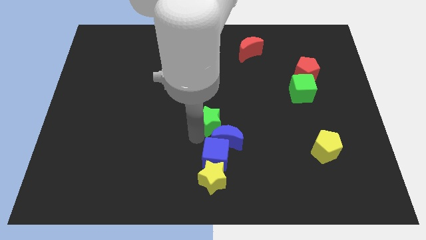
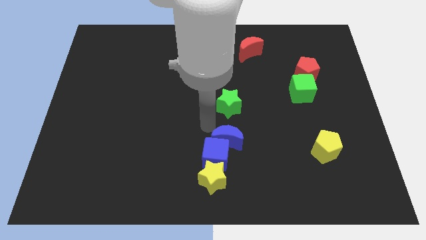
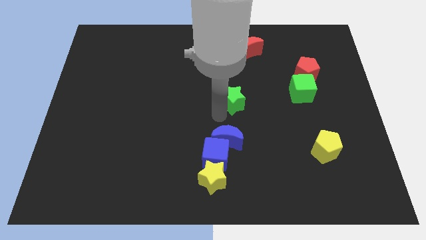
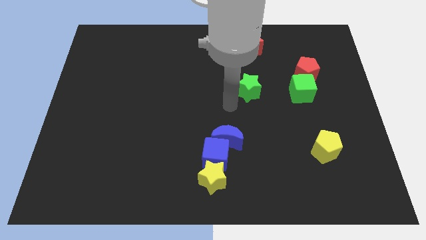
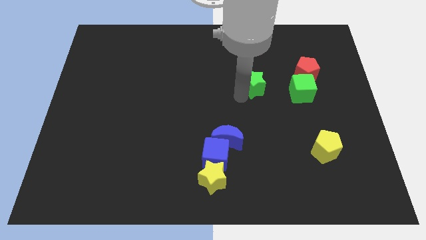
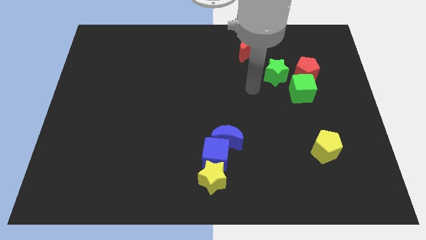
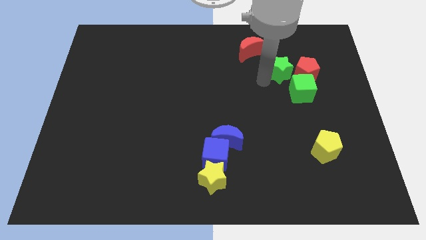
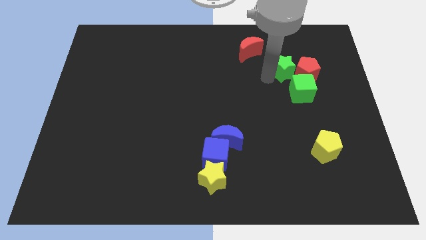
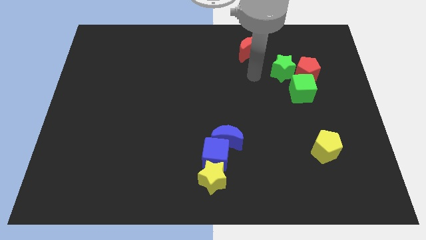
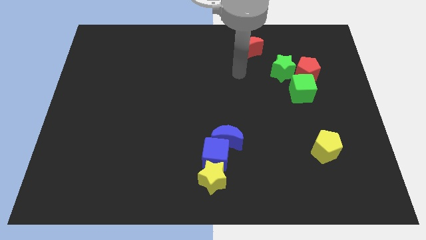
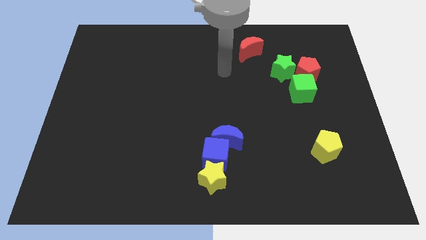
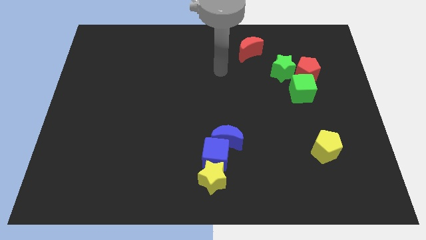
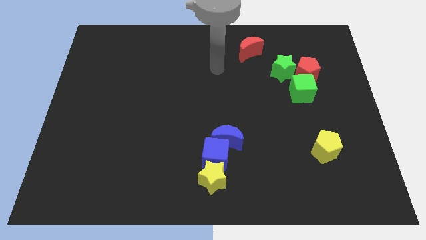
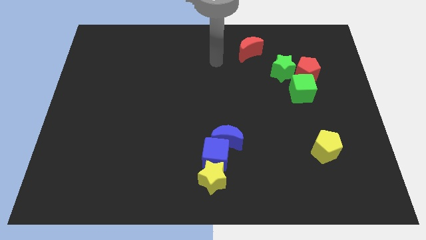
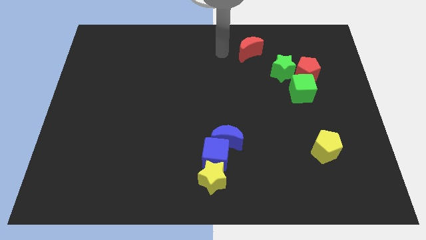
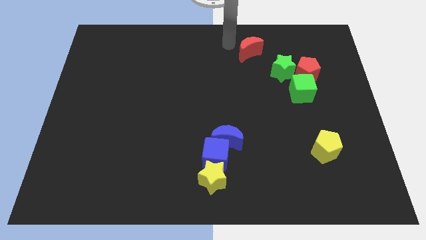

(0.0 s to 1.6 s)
put the green star on the left side of the red pentagon

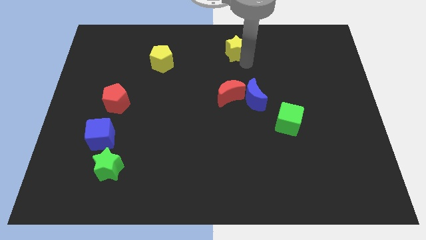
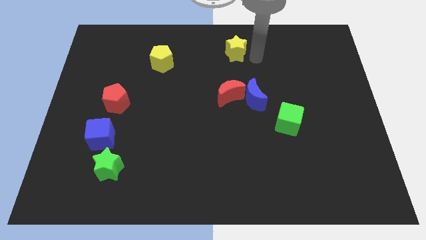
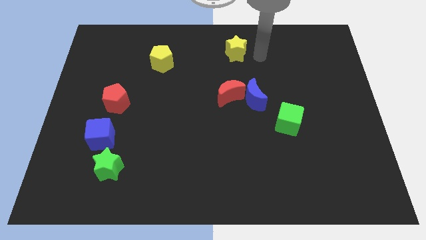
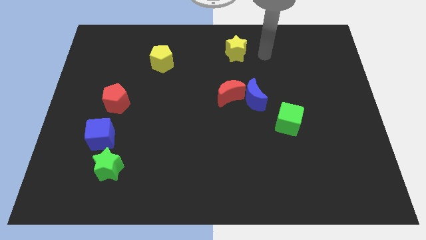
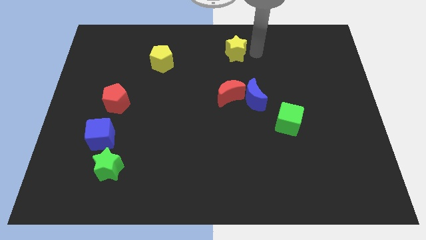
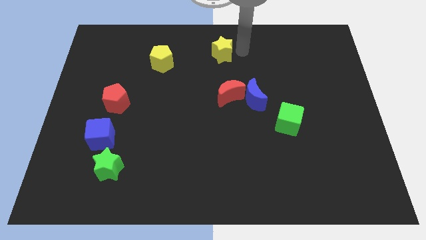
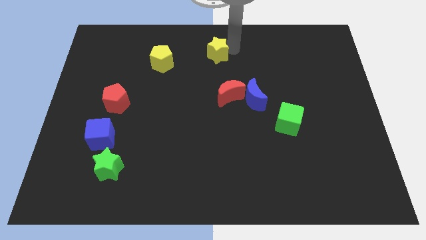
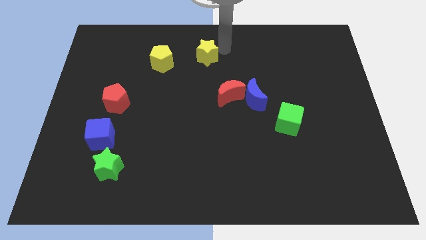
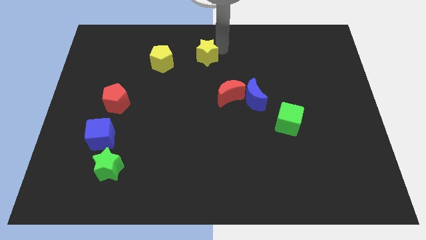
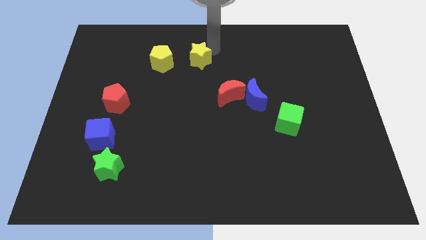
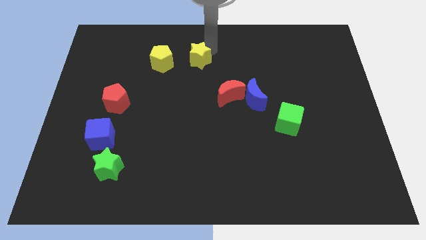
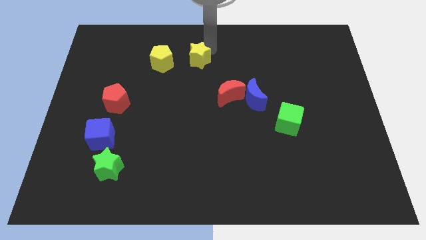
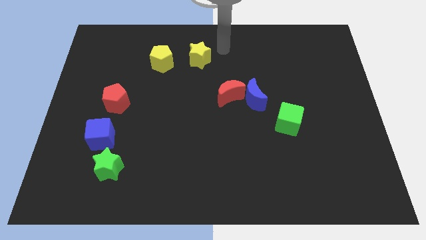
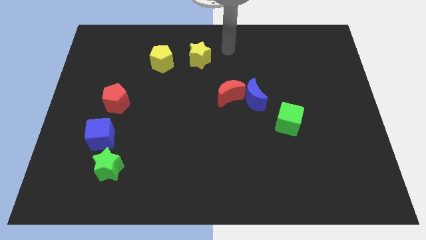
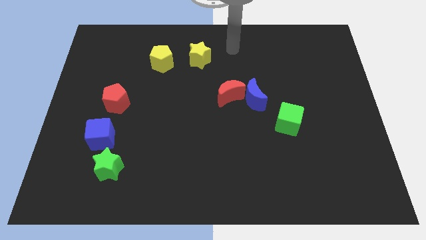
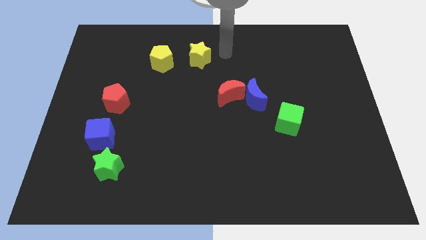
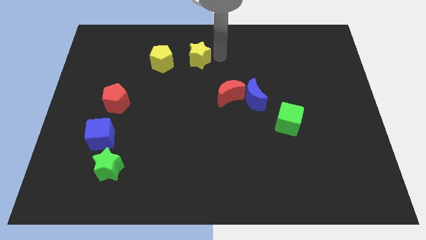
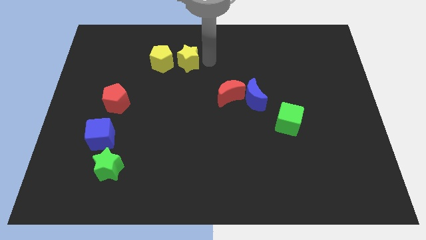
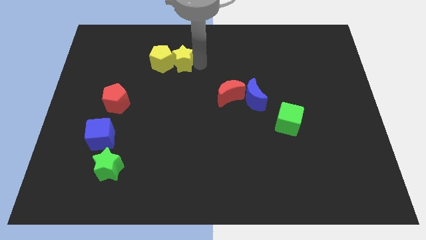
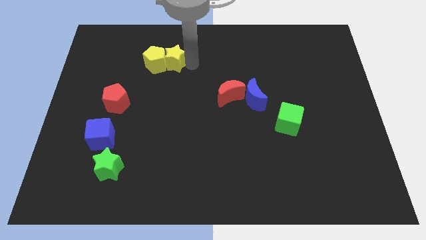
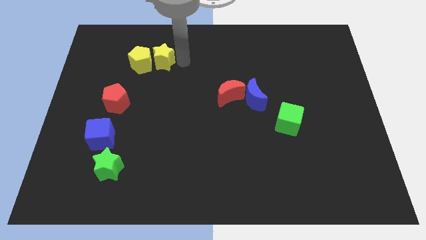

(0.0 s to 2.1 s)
move yellow star right beside yellow pentagon

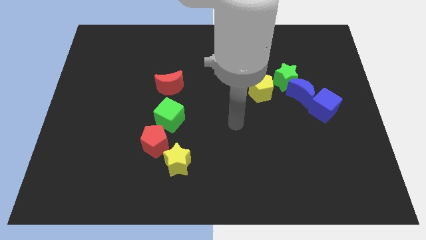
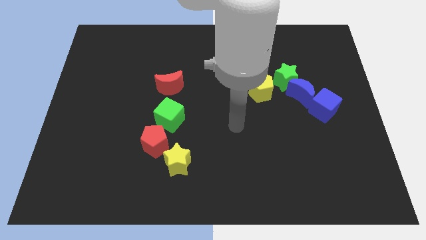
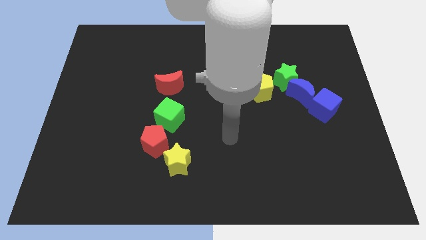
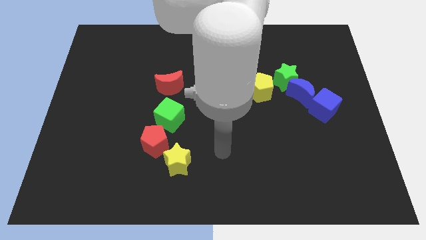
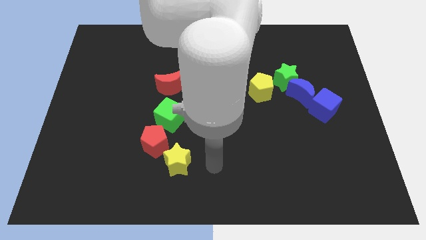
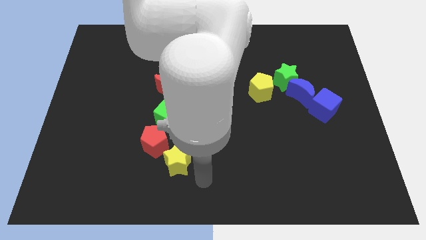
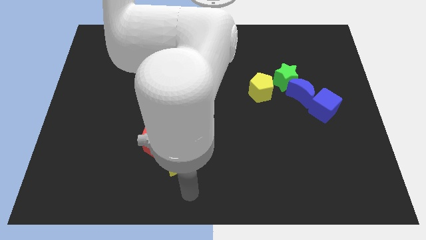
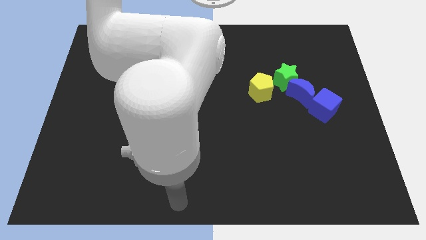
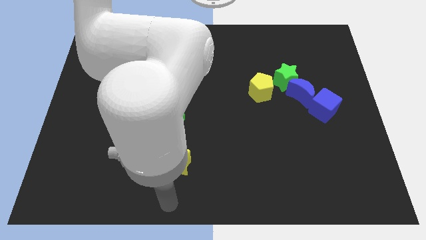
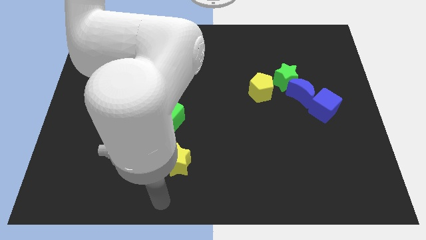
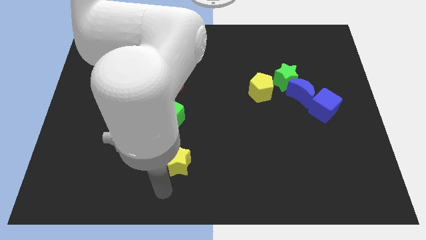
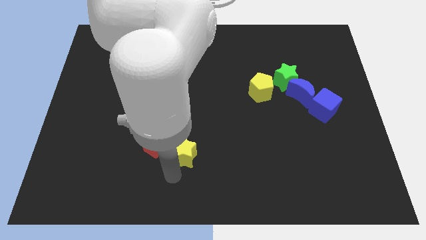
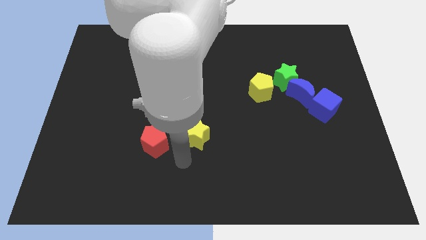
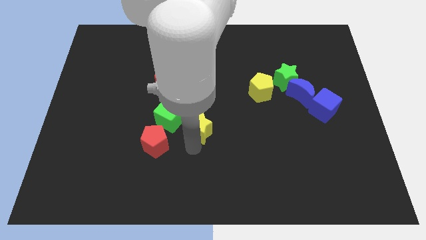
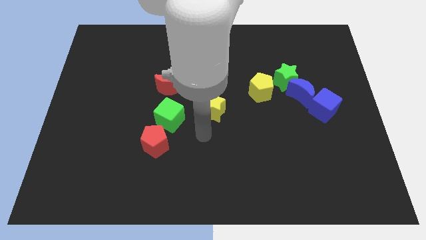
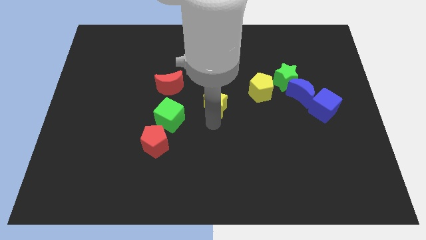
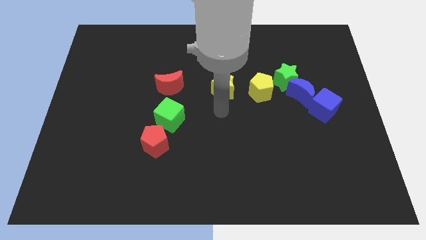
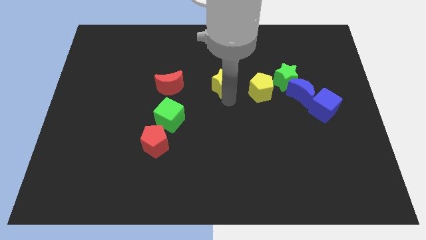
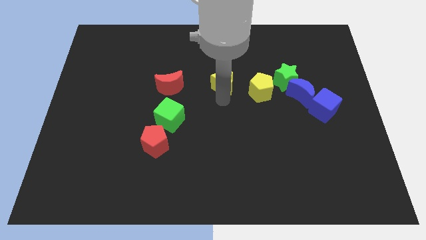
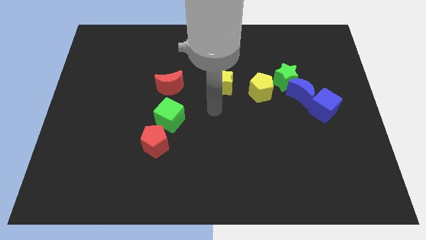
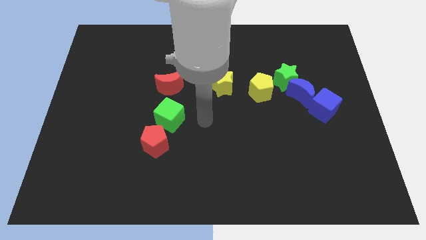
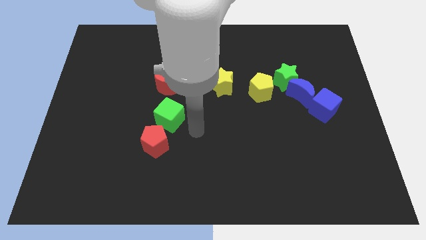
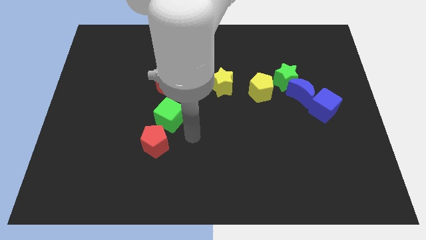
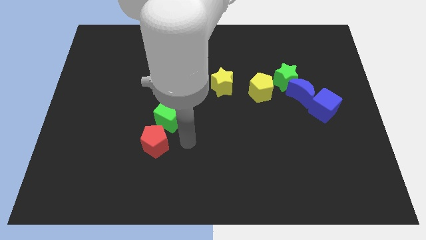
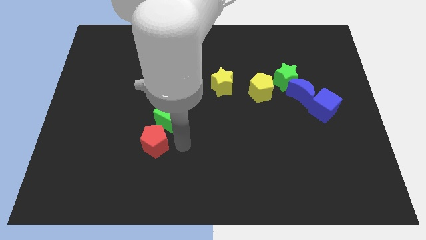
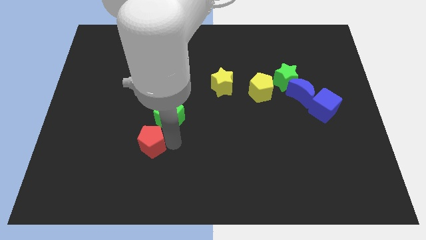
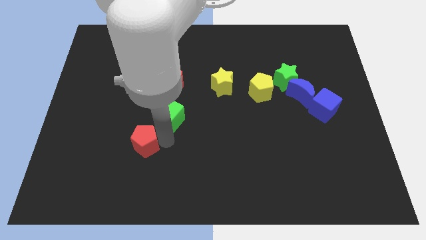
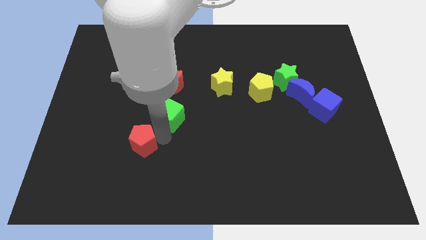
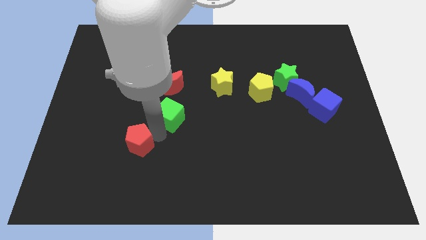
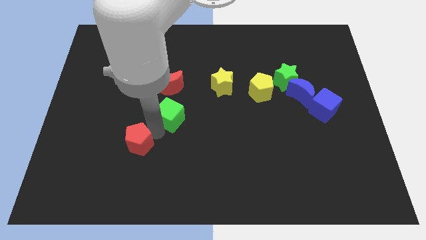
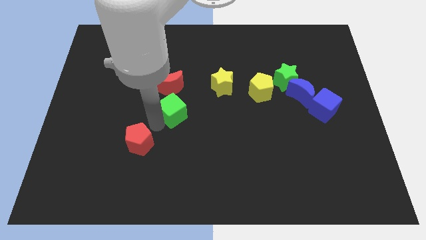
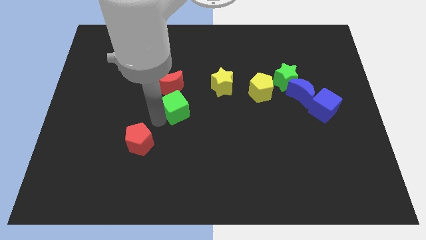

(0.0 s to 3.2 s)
place the yellow star in between red crescent and yellow pentagon

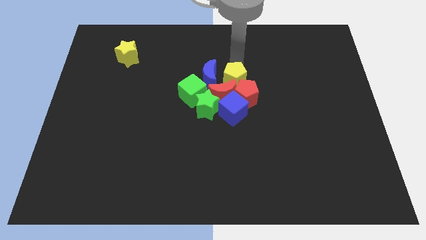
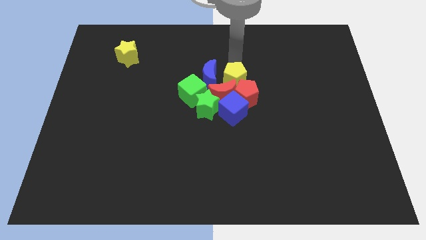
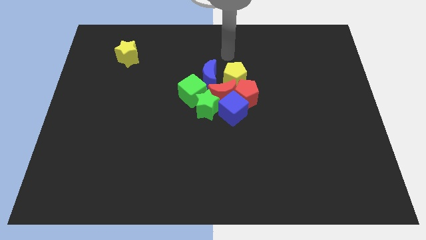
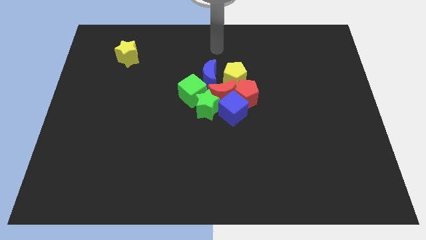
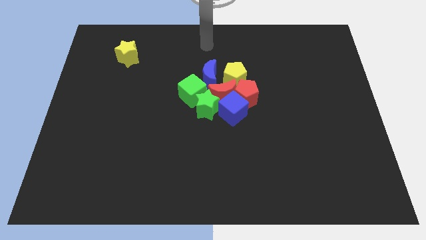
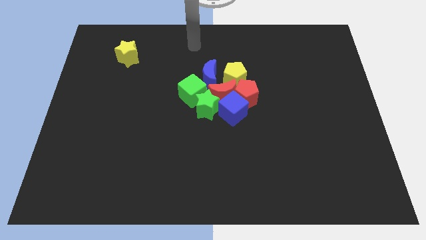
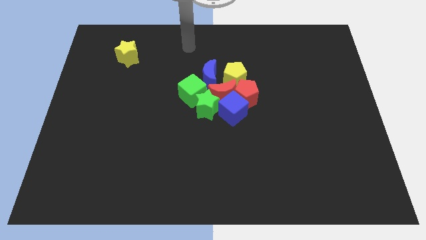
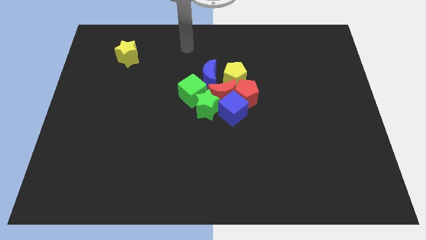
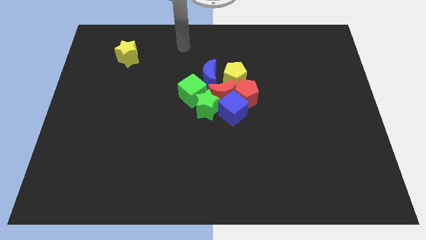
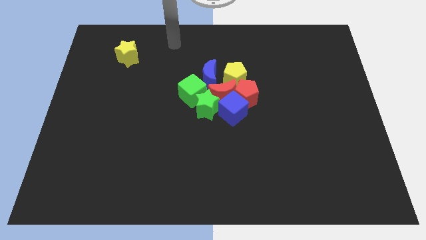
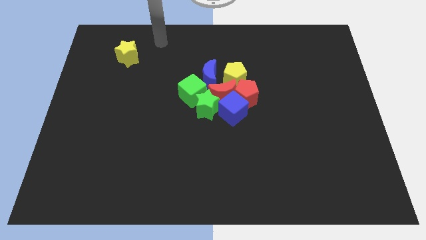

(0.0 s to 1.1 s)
move the arm away from the yellow pentagon

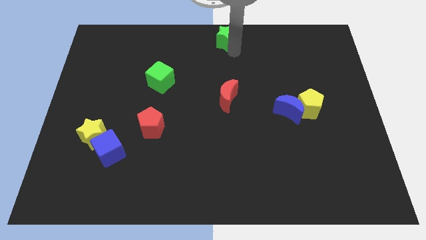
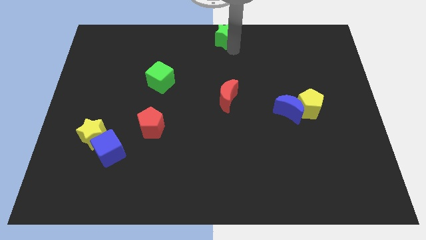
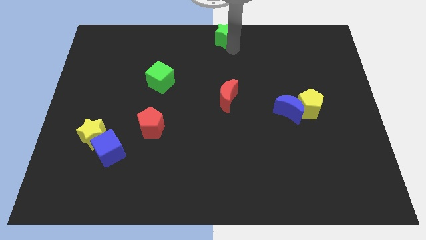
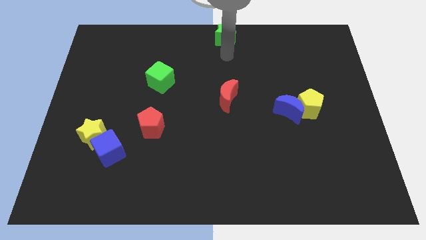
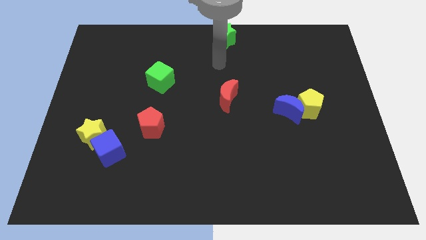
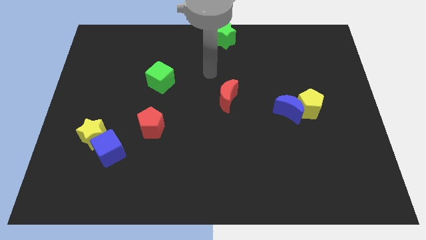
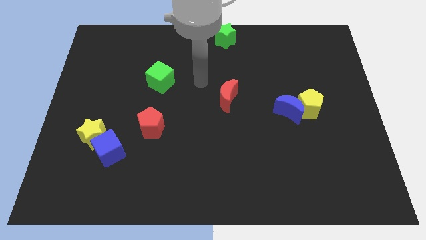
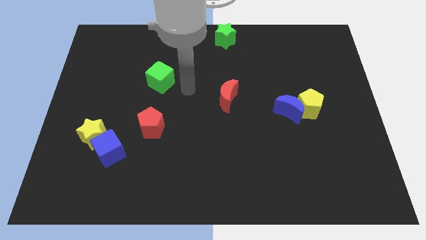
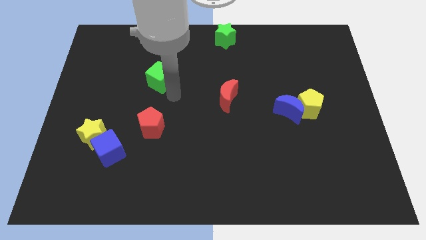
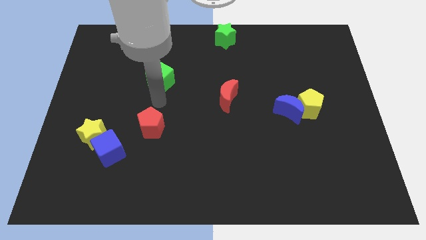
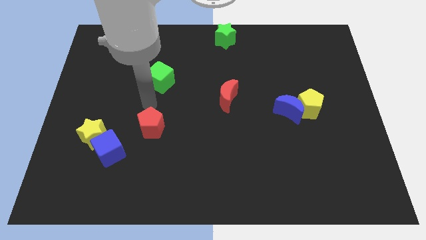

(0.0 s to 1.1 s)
place arm in between green cube and red pentagon
